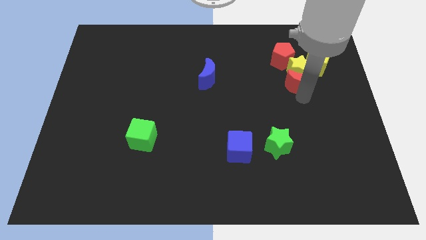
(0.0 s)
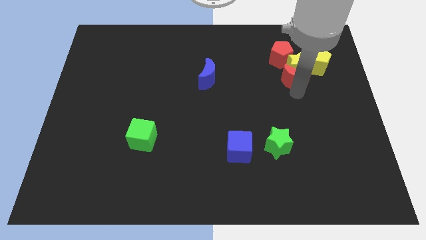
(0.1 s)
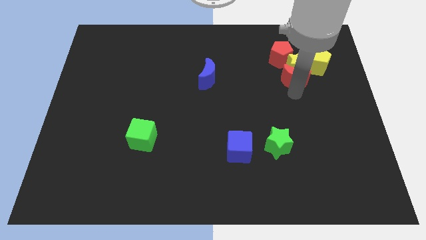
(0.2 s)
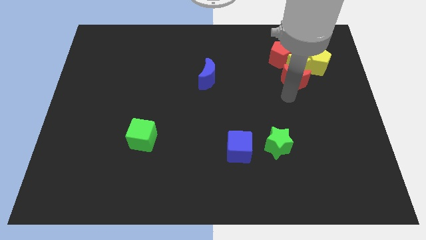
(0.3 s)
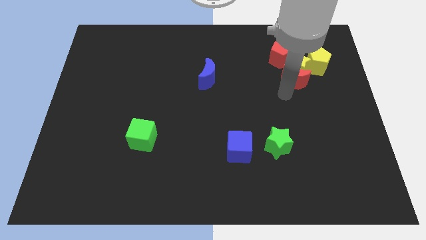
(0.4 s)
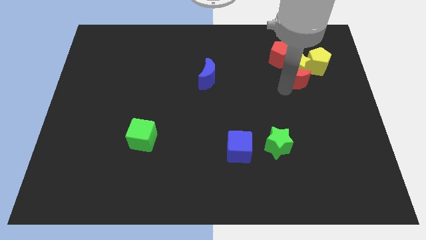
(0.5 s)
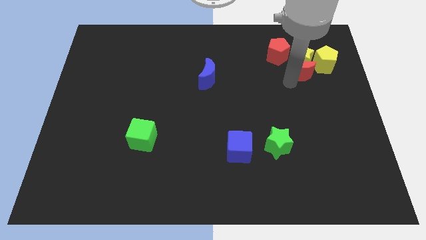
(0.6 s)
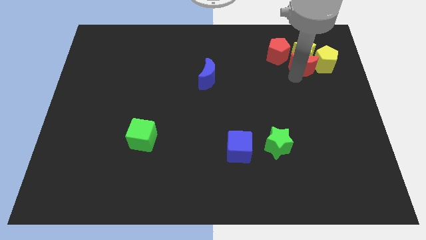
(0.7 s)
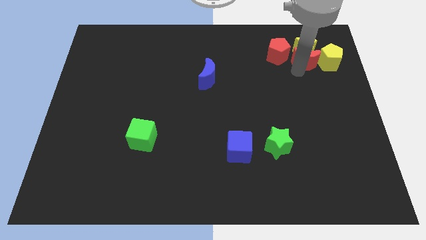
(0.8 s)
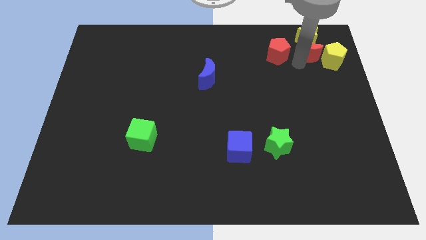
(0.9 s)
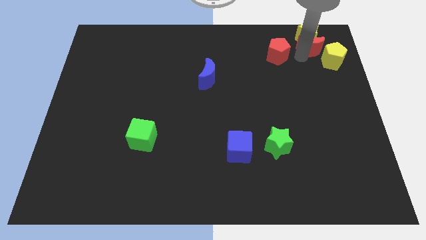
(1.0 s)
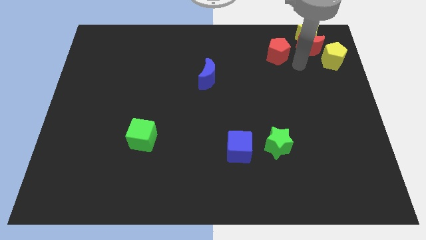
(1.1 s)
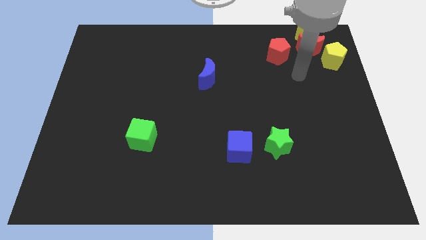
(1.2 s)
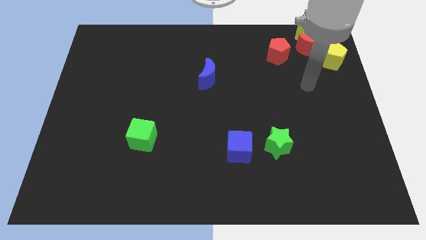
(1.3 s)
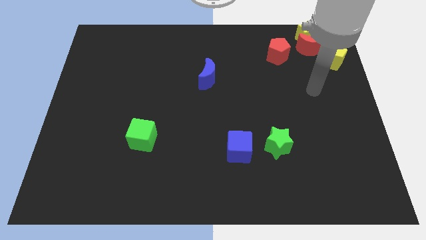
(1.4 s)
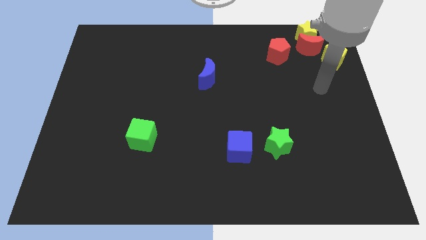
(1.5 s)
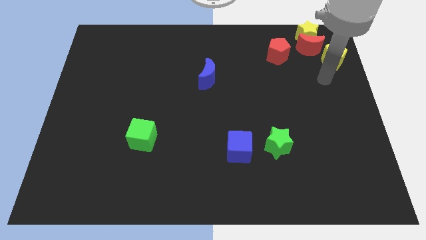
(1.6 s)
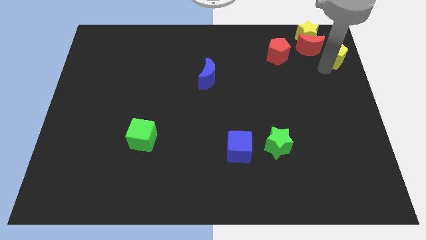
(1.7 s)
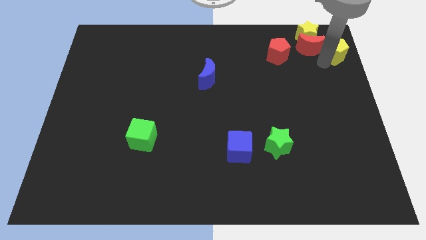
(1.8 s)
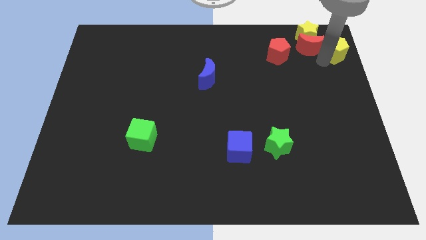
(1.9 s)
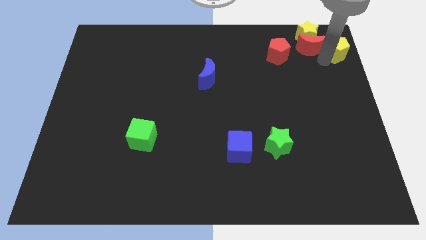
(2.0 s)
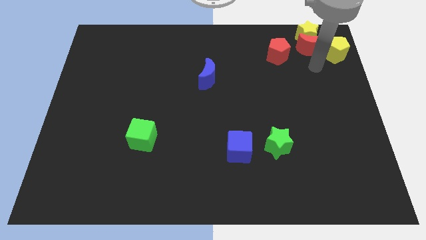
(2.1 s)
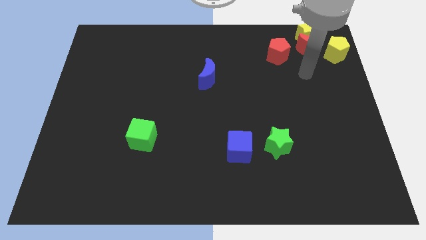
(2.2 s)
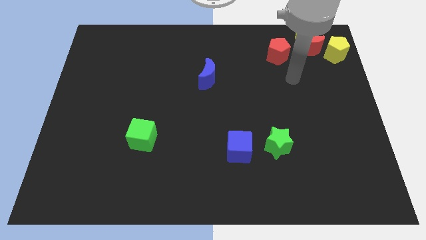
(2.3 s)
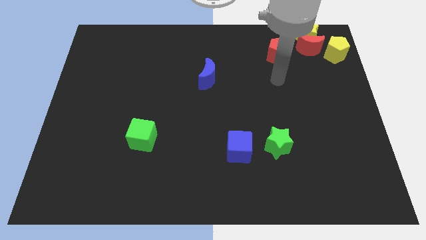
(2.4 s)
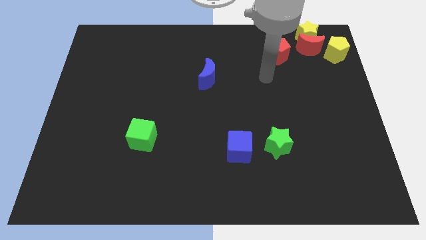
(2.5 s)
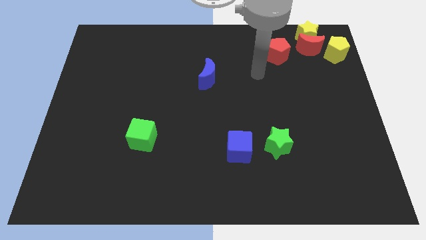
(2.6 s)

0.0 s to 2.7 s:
push the group of blocks to the top right corner of the board

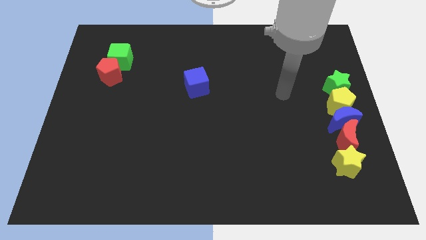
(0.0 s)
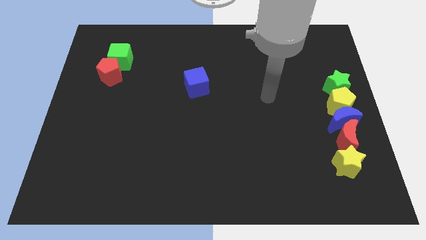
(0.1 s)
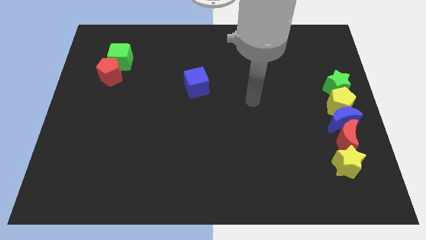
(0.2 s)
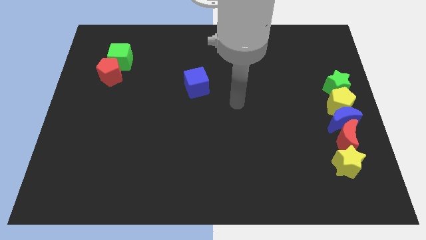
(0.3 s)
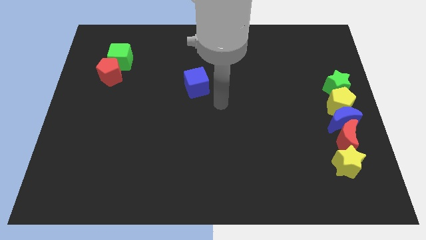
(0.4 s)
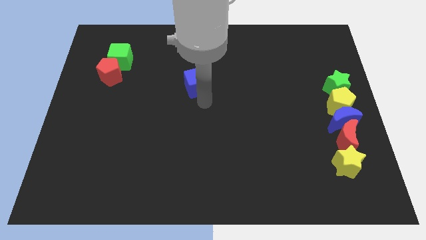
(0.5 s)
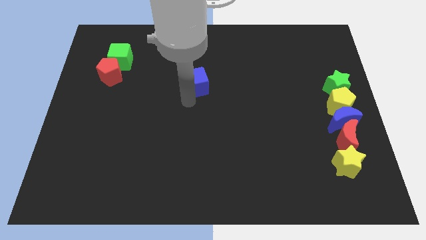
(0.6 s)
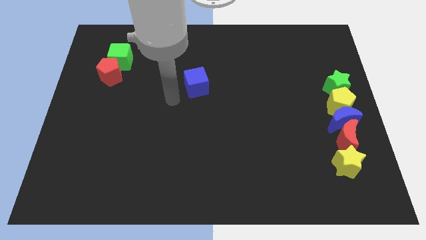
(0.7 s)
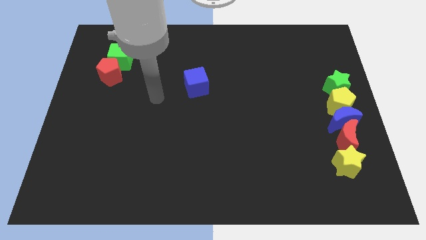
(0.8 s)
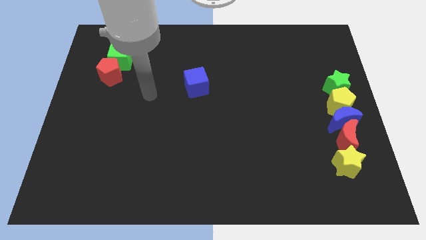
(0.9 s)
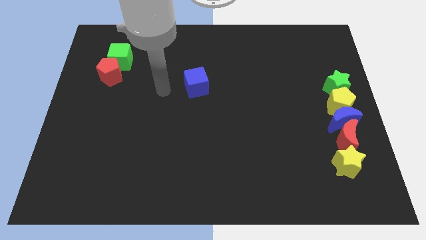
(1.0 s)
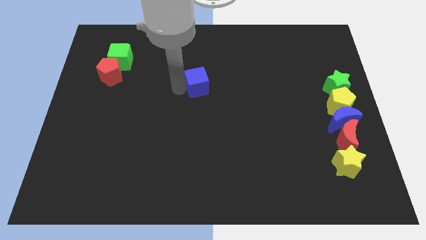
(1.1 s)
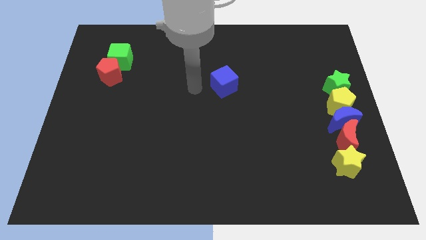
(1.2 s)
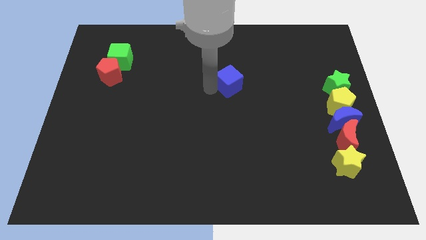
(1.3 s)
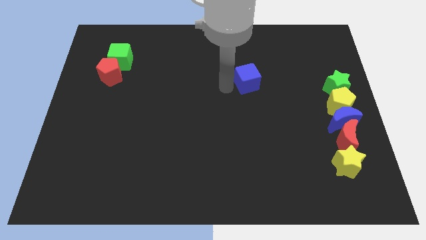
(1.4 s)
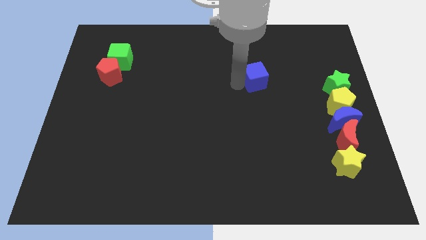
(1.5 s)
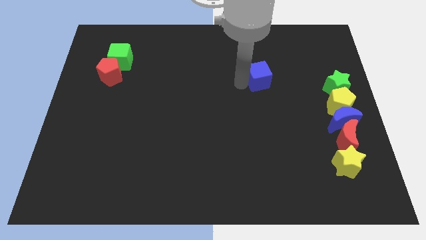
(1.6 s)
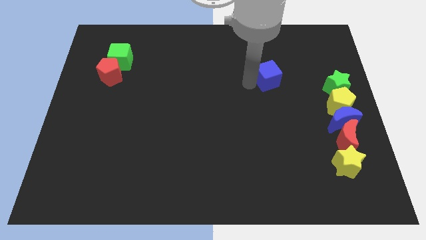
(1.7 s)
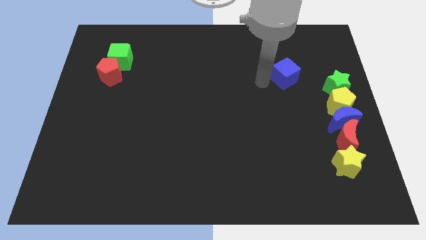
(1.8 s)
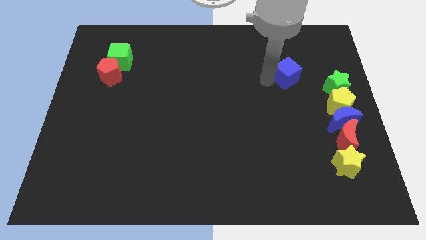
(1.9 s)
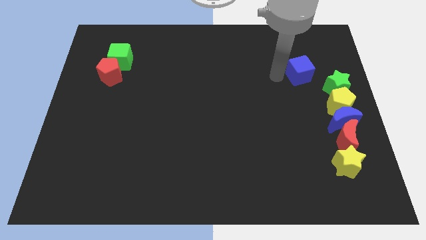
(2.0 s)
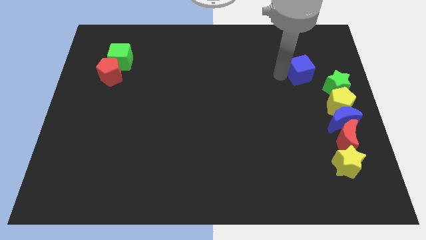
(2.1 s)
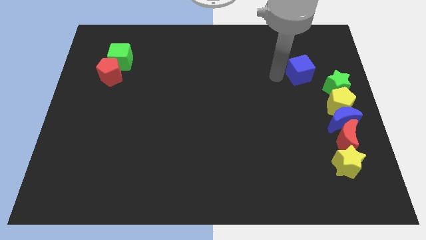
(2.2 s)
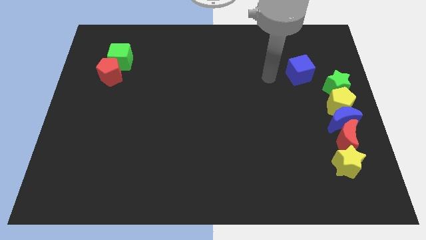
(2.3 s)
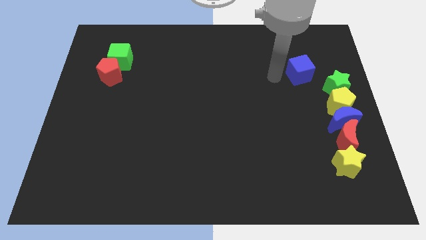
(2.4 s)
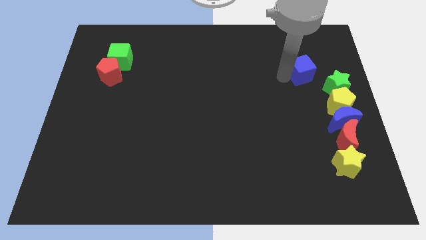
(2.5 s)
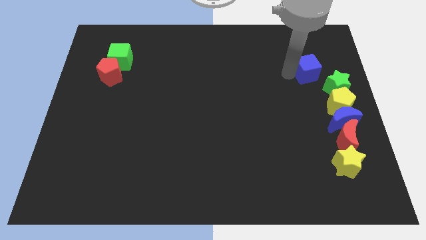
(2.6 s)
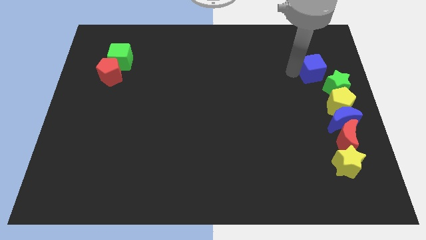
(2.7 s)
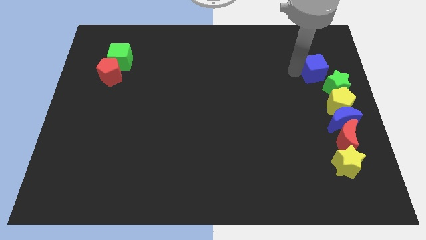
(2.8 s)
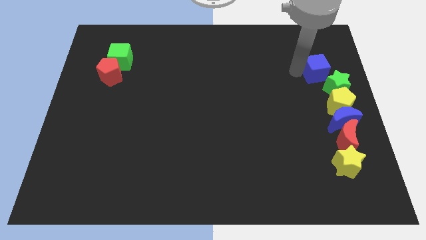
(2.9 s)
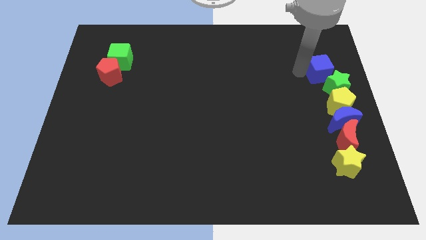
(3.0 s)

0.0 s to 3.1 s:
move the blue cube slightly to the right

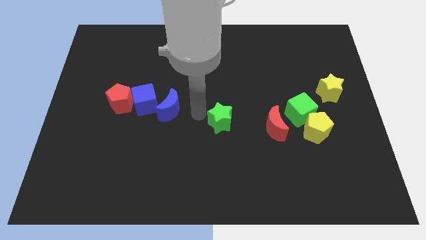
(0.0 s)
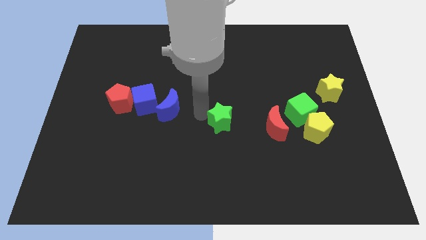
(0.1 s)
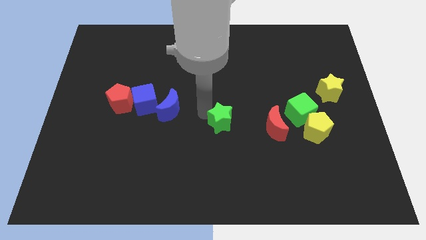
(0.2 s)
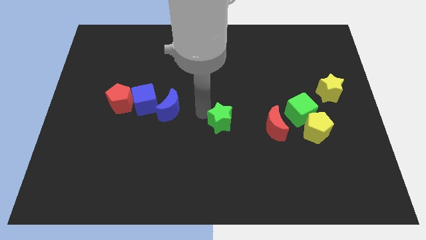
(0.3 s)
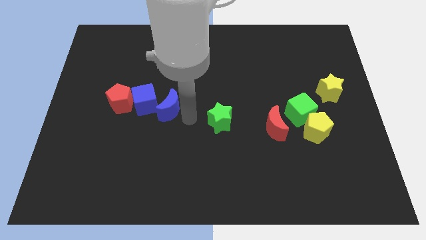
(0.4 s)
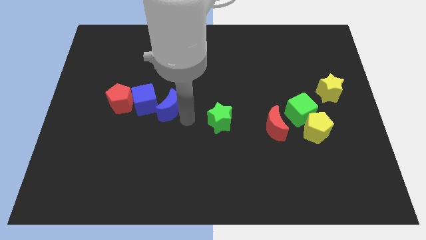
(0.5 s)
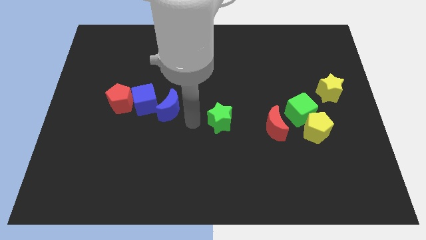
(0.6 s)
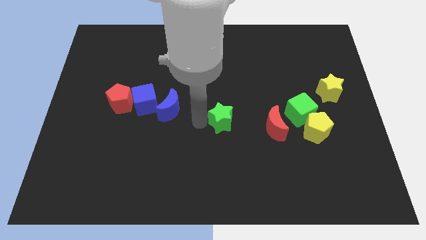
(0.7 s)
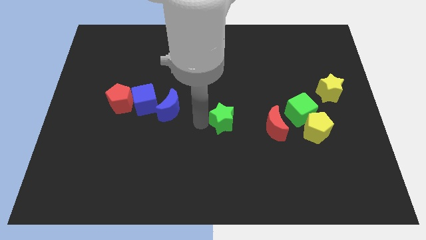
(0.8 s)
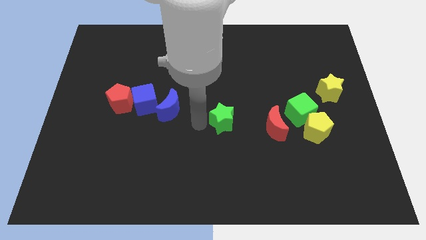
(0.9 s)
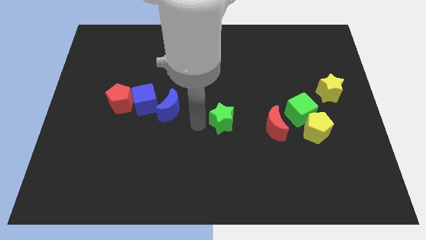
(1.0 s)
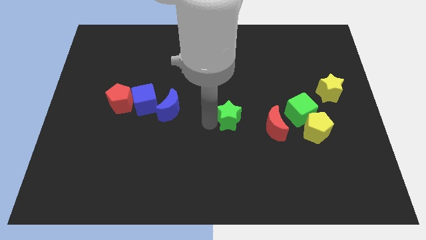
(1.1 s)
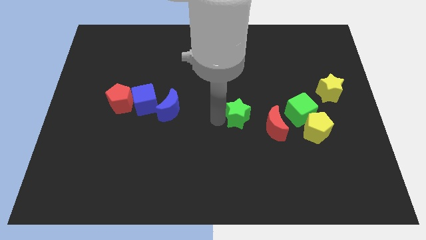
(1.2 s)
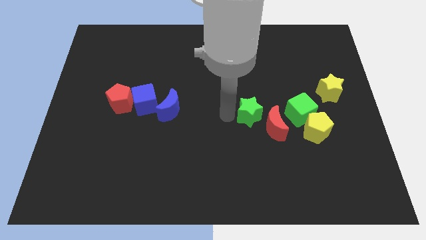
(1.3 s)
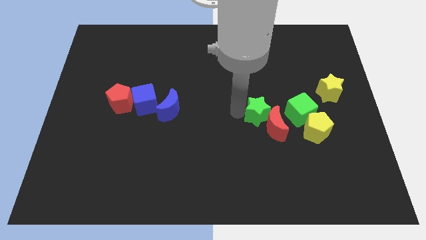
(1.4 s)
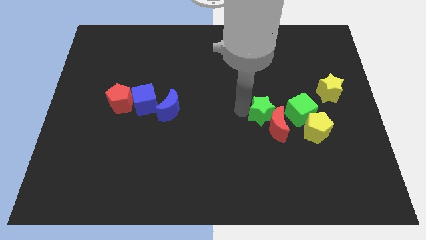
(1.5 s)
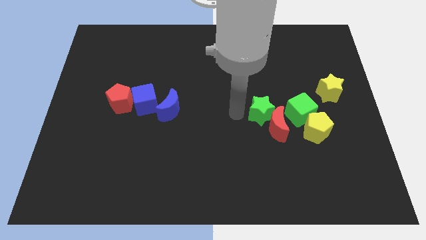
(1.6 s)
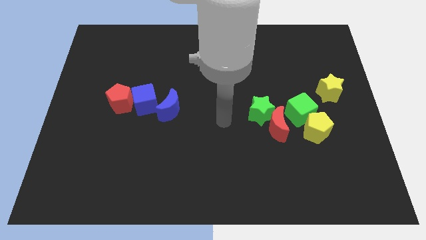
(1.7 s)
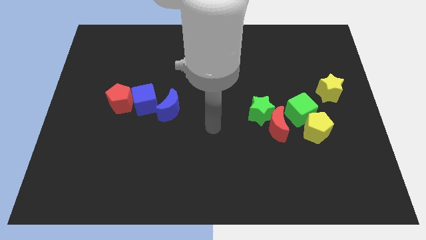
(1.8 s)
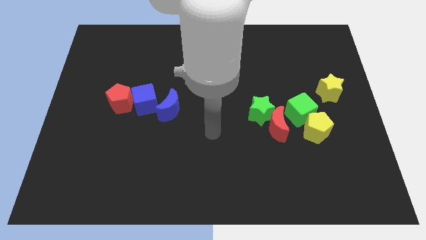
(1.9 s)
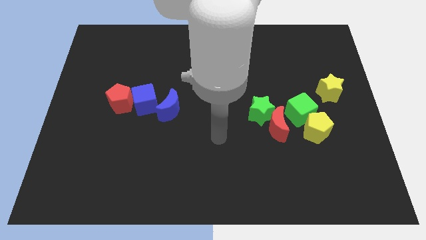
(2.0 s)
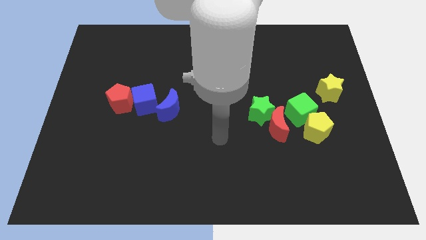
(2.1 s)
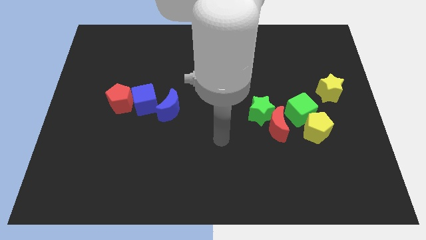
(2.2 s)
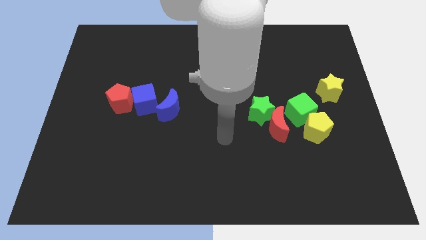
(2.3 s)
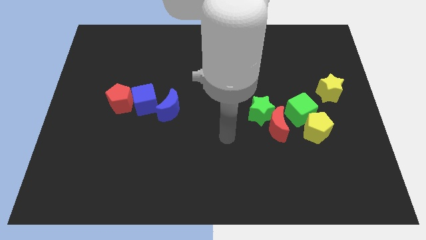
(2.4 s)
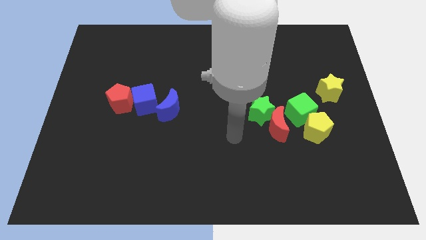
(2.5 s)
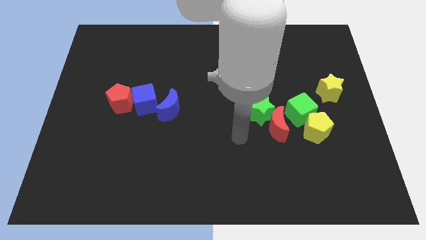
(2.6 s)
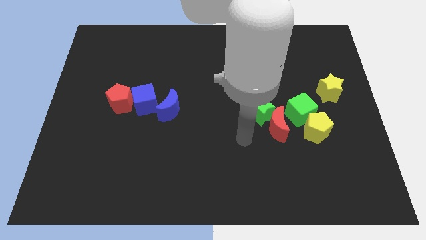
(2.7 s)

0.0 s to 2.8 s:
move green star left above the red moon

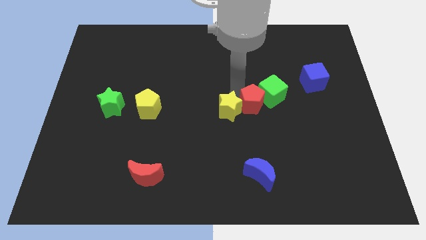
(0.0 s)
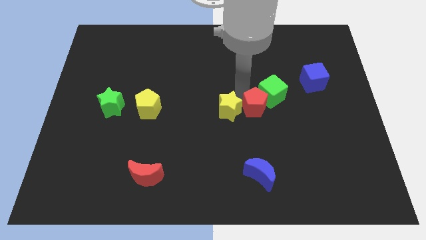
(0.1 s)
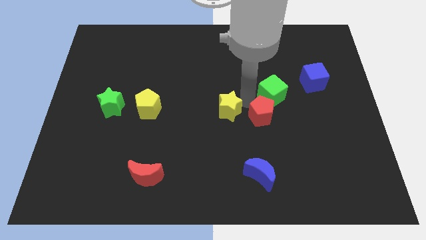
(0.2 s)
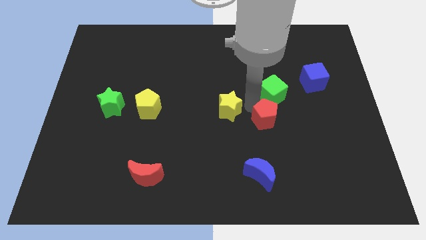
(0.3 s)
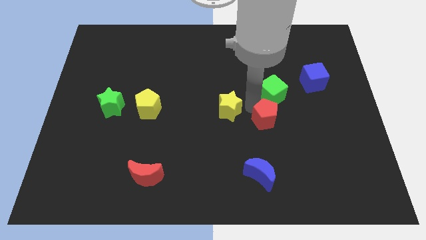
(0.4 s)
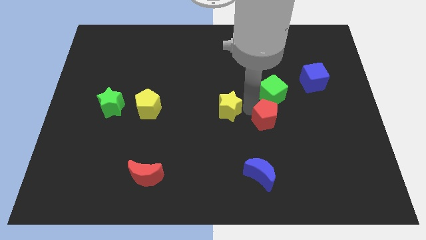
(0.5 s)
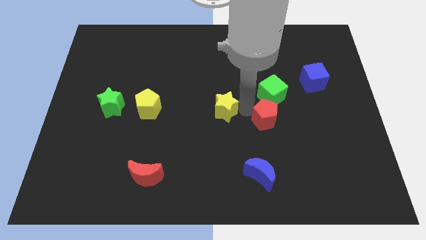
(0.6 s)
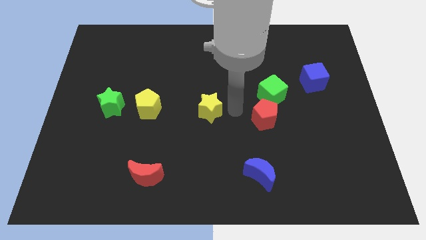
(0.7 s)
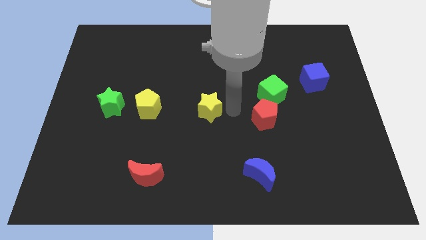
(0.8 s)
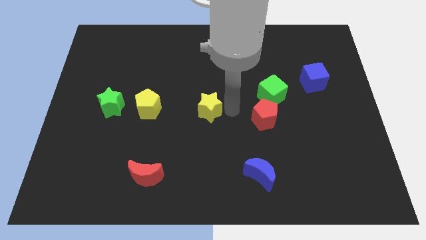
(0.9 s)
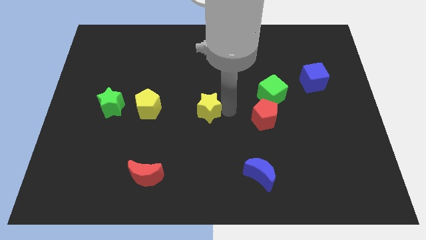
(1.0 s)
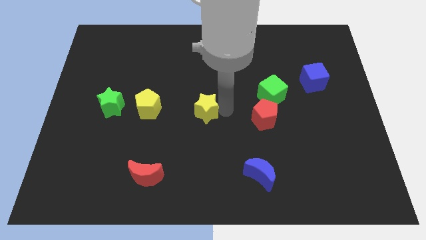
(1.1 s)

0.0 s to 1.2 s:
separate red pentagon from yellow star and green cube
